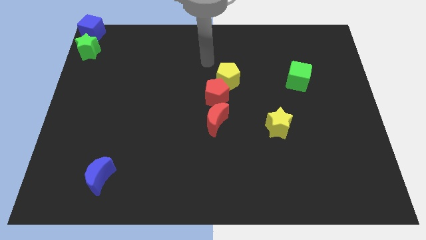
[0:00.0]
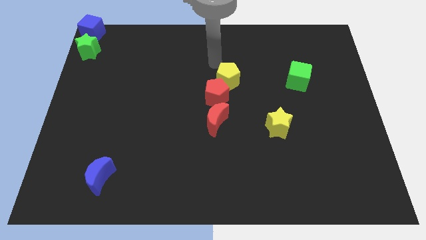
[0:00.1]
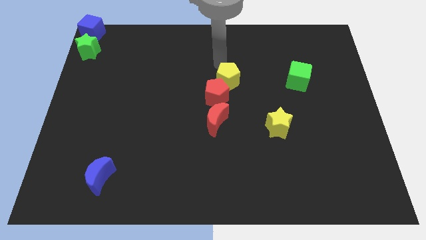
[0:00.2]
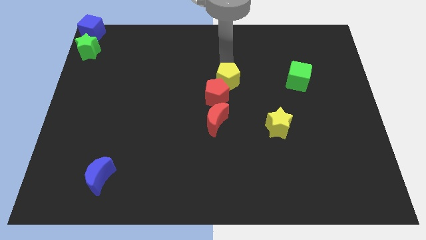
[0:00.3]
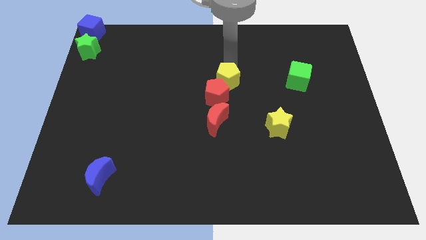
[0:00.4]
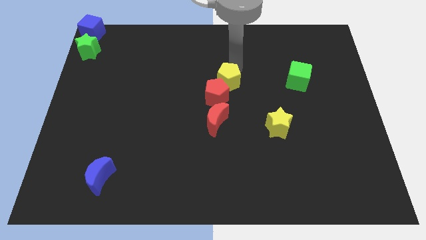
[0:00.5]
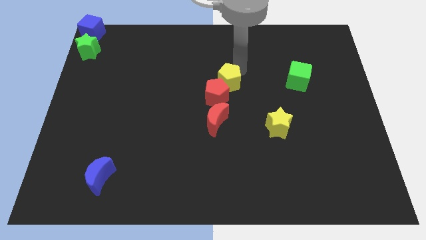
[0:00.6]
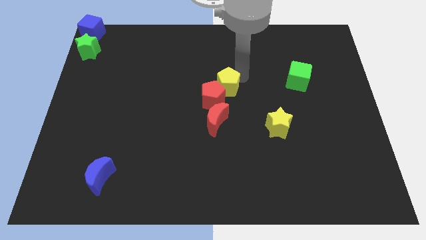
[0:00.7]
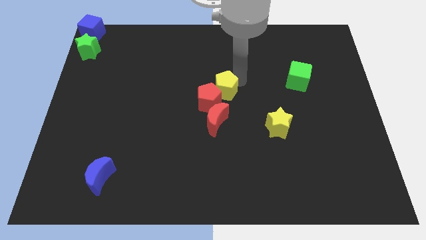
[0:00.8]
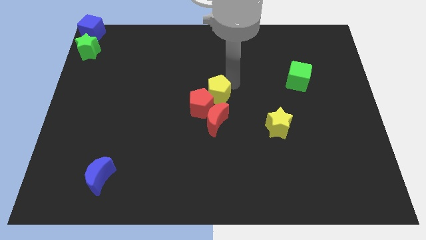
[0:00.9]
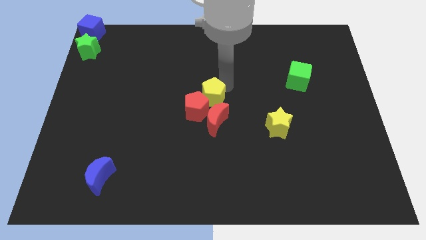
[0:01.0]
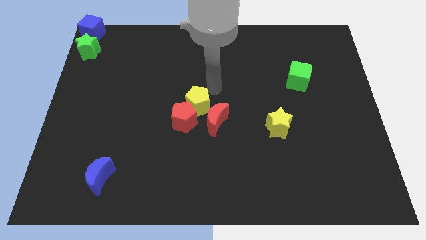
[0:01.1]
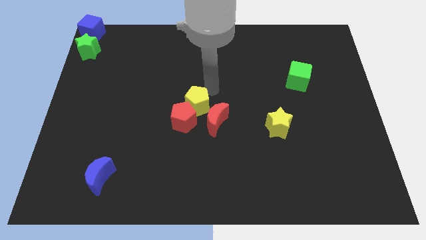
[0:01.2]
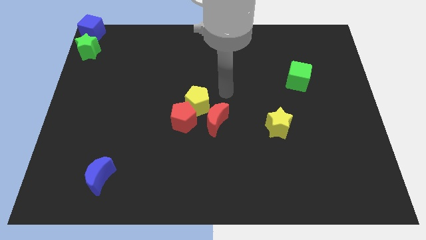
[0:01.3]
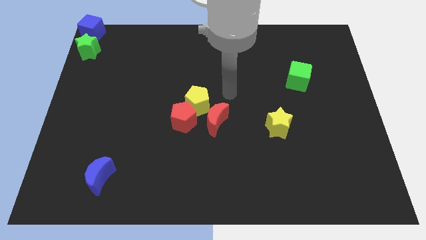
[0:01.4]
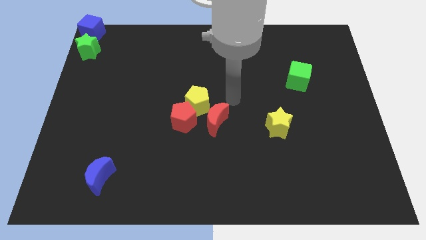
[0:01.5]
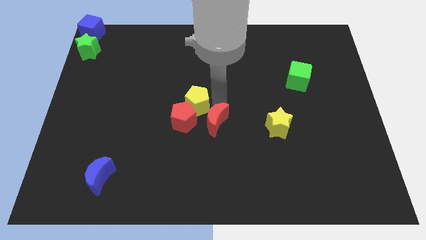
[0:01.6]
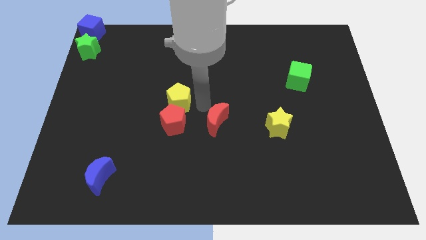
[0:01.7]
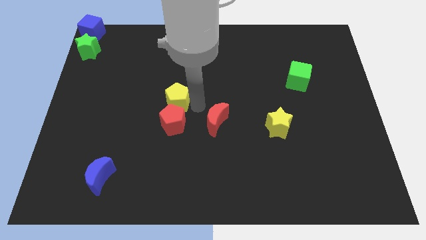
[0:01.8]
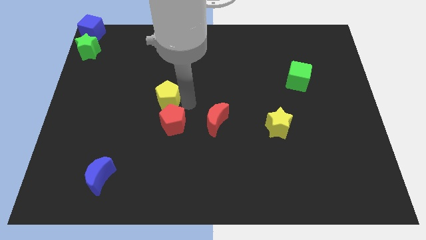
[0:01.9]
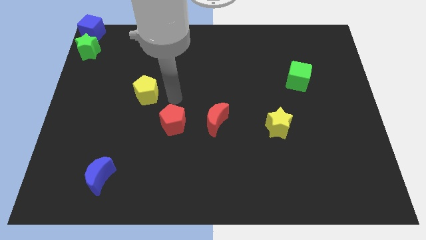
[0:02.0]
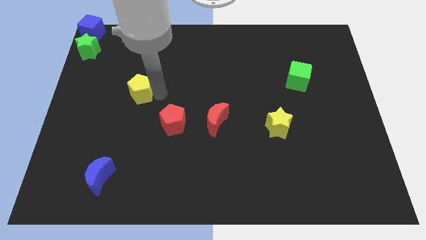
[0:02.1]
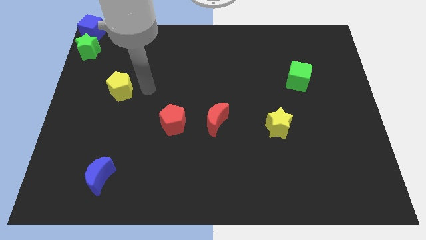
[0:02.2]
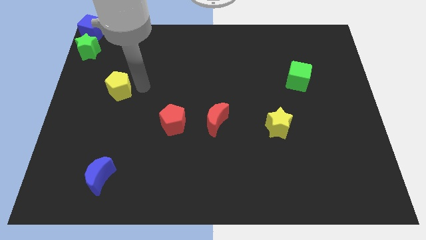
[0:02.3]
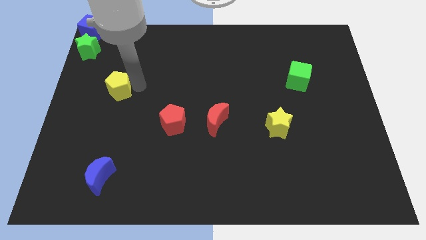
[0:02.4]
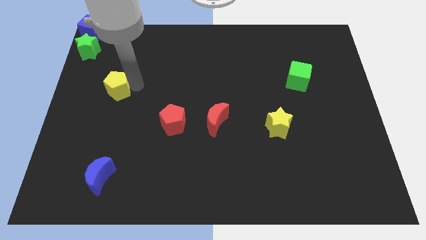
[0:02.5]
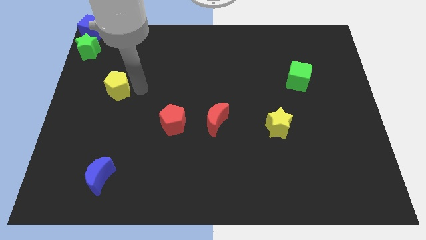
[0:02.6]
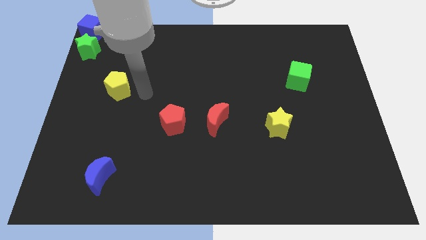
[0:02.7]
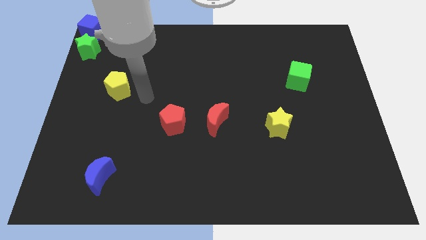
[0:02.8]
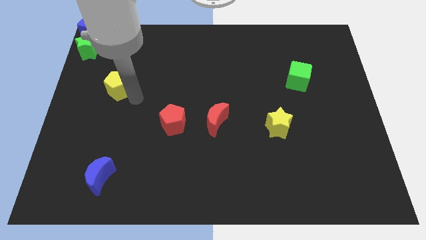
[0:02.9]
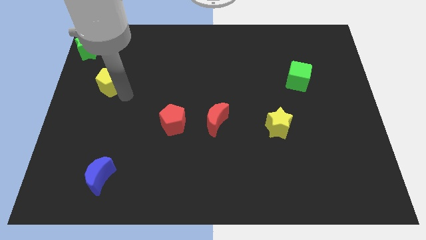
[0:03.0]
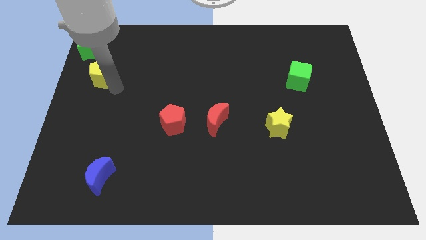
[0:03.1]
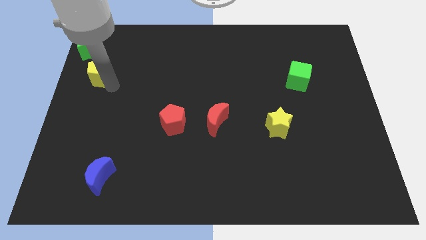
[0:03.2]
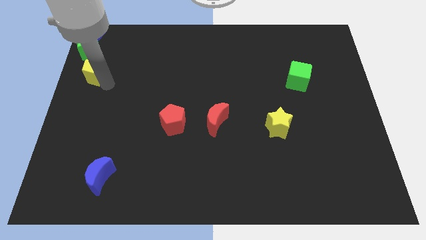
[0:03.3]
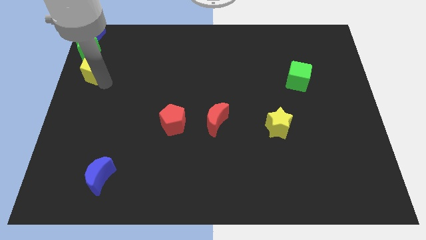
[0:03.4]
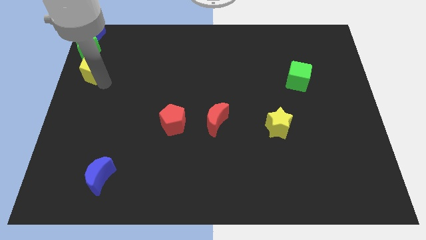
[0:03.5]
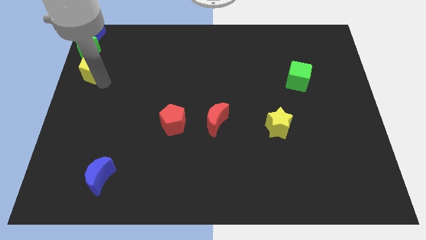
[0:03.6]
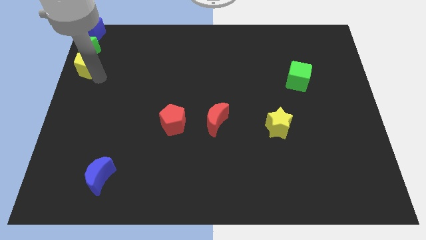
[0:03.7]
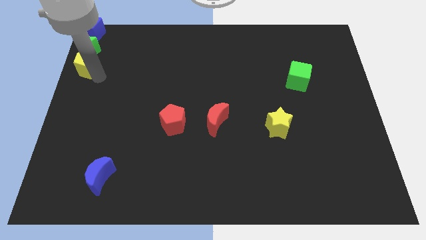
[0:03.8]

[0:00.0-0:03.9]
place yellow pentagon below green star

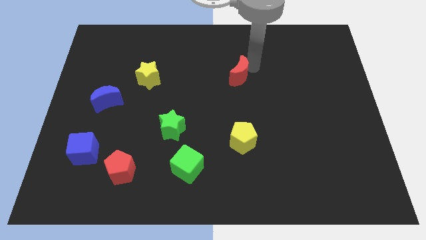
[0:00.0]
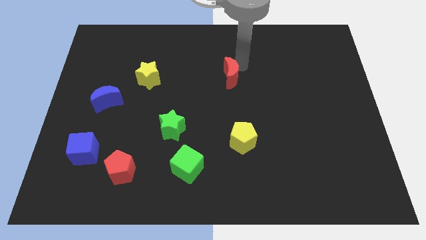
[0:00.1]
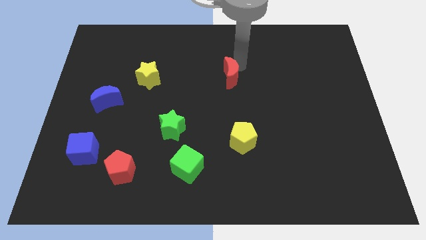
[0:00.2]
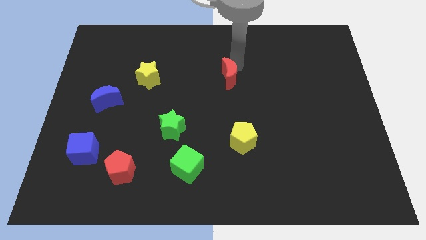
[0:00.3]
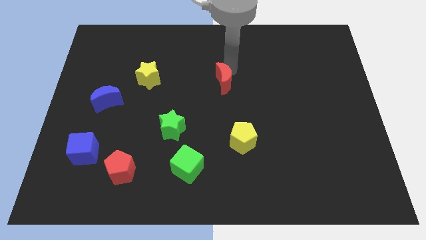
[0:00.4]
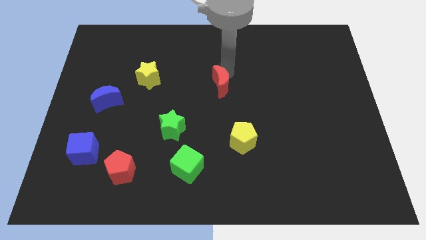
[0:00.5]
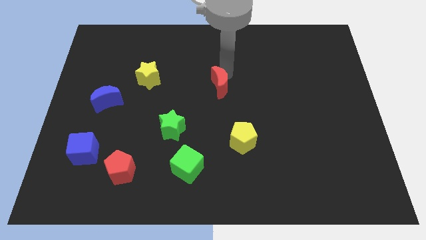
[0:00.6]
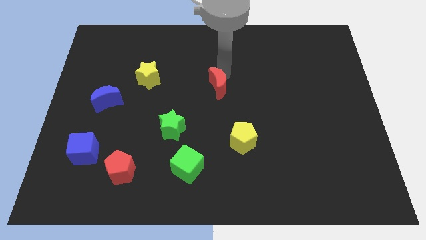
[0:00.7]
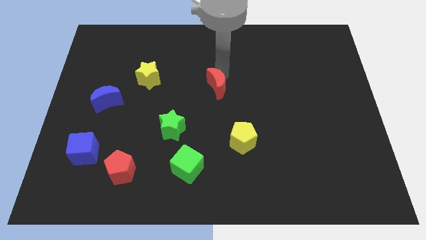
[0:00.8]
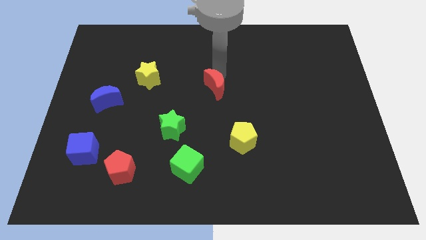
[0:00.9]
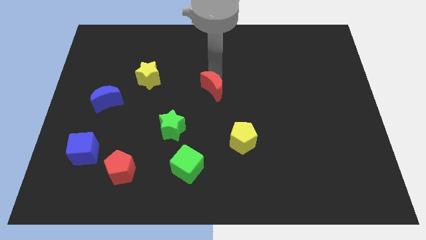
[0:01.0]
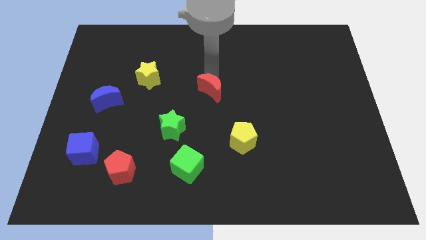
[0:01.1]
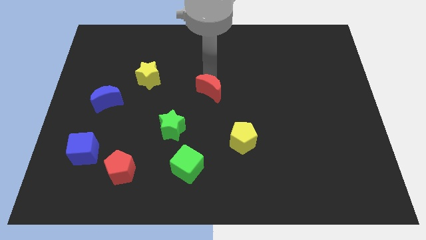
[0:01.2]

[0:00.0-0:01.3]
move the pentagon to the center of the board

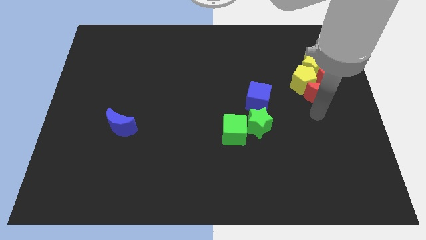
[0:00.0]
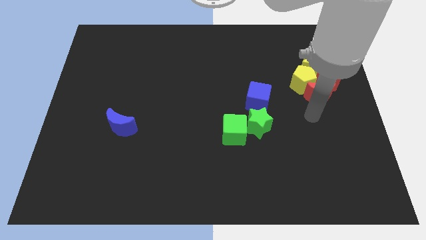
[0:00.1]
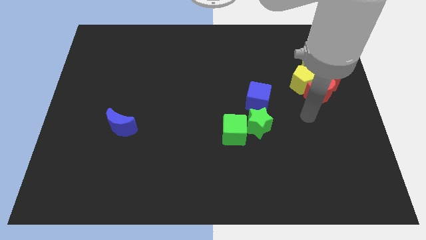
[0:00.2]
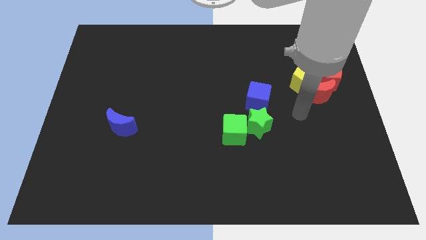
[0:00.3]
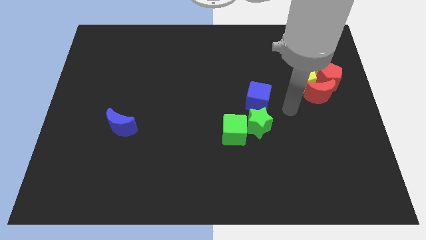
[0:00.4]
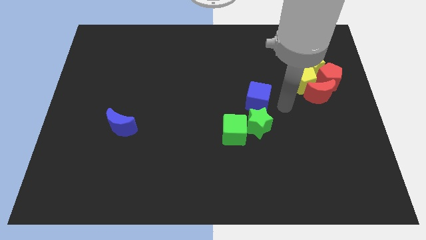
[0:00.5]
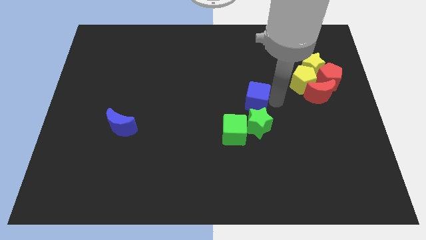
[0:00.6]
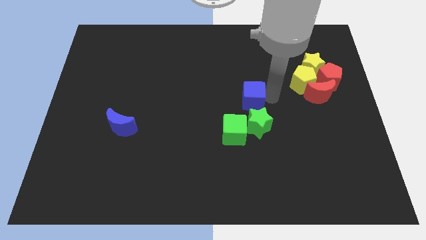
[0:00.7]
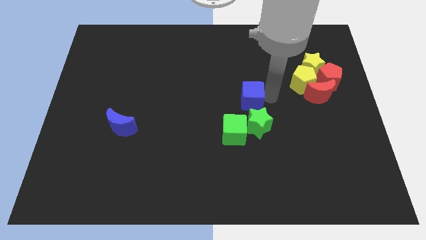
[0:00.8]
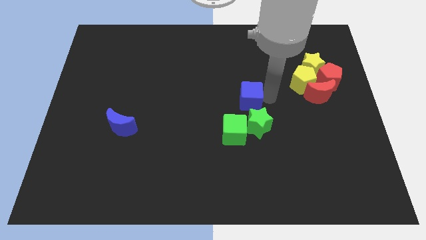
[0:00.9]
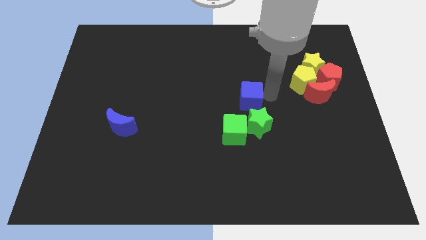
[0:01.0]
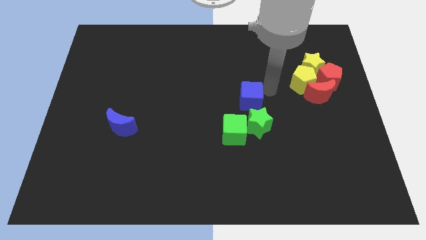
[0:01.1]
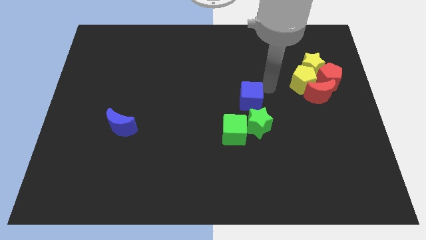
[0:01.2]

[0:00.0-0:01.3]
push your arm near blue cube

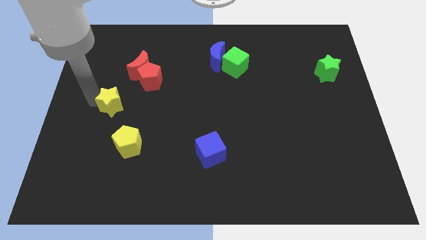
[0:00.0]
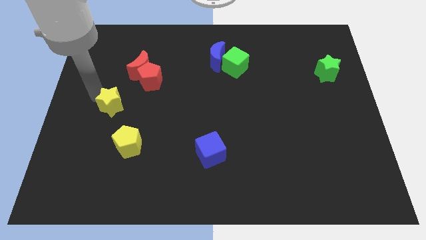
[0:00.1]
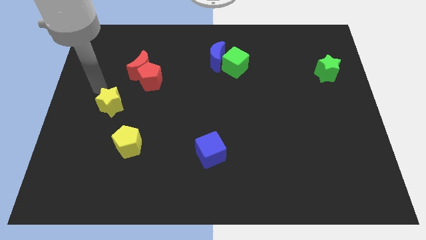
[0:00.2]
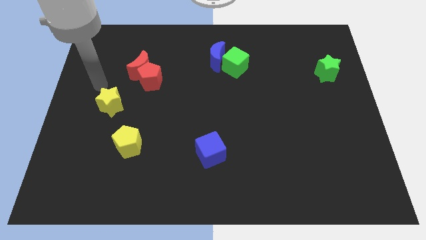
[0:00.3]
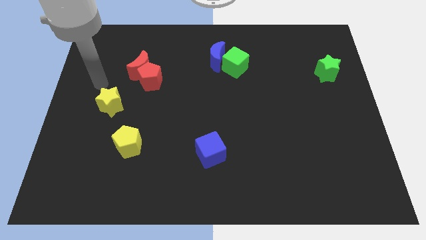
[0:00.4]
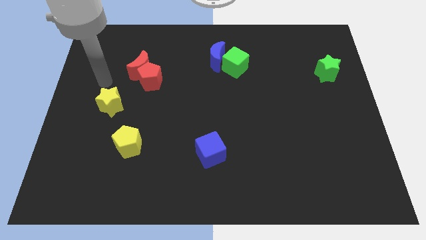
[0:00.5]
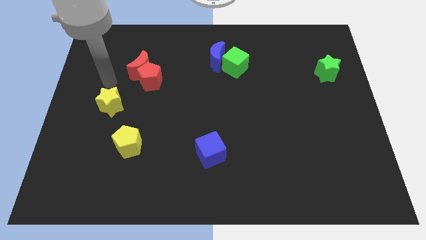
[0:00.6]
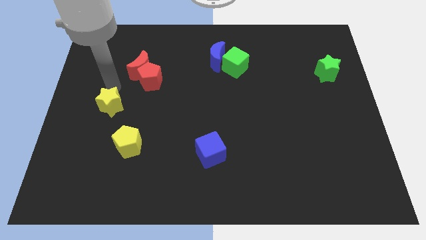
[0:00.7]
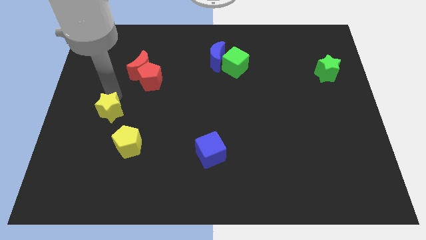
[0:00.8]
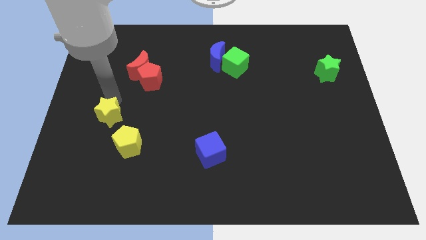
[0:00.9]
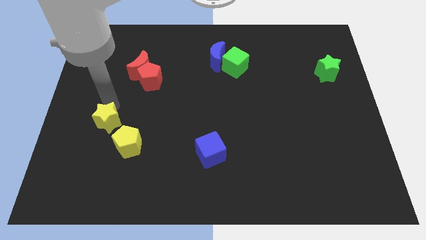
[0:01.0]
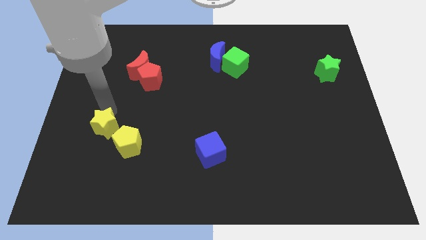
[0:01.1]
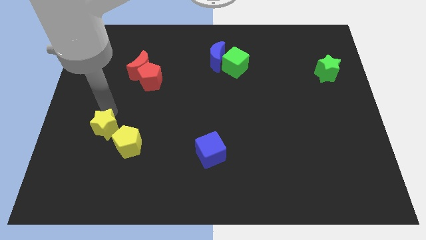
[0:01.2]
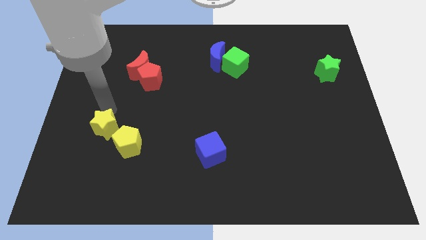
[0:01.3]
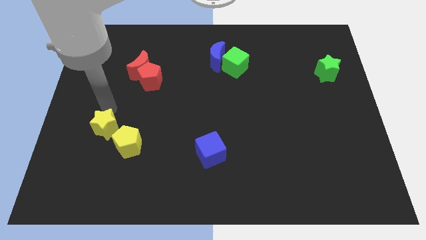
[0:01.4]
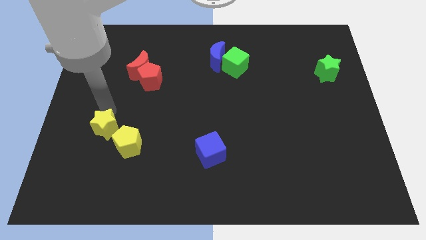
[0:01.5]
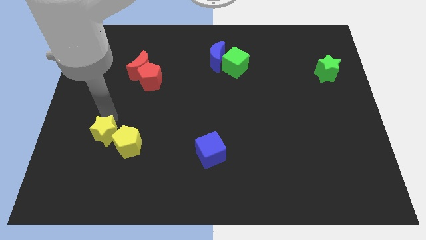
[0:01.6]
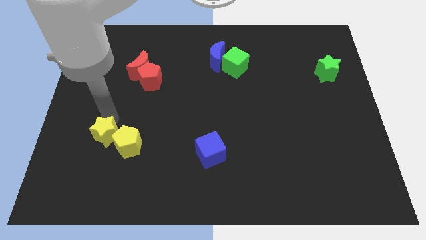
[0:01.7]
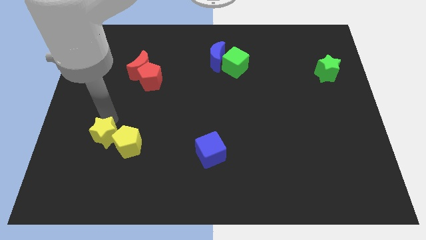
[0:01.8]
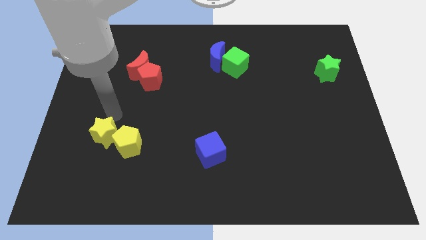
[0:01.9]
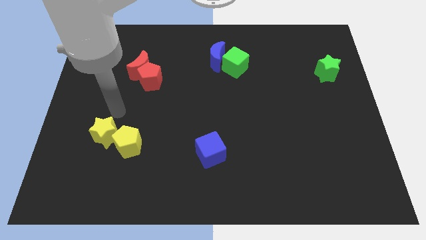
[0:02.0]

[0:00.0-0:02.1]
move the yellow star into the yellow pentagon

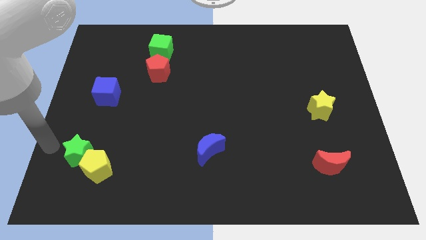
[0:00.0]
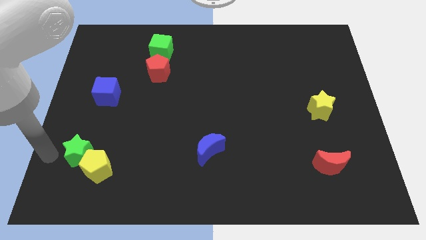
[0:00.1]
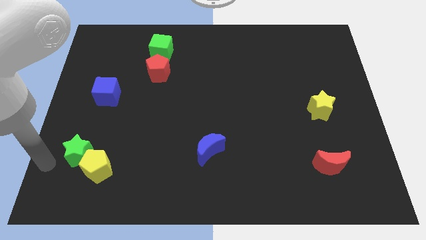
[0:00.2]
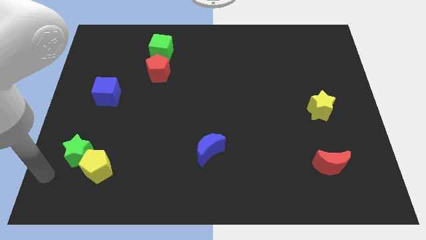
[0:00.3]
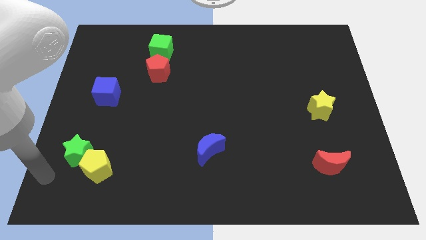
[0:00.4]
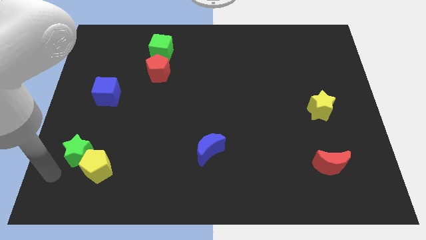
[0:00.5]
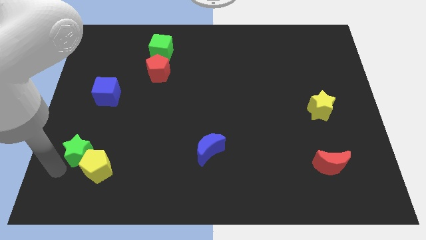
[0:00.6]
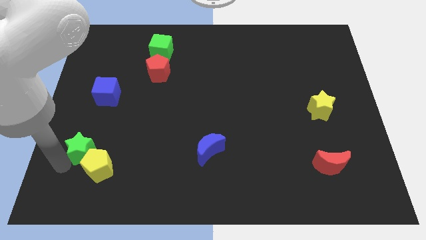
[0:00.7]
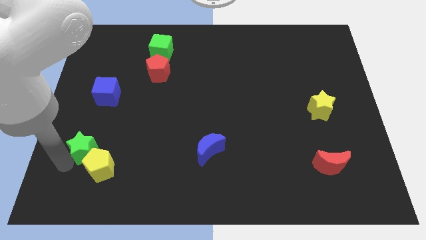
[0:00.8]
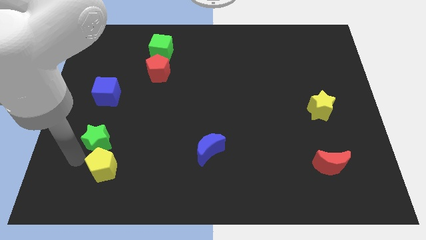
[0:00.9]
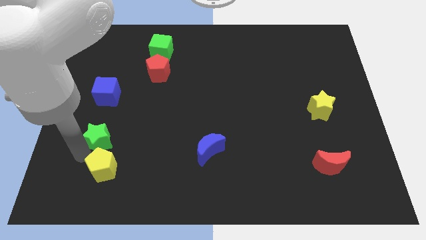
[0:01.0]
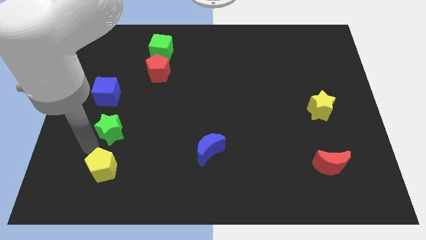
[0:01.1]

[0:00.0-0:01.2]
place green star to the top of yellow pentagon
